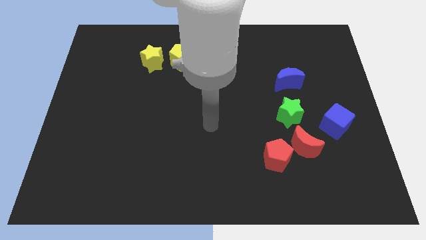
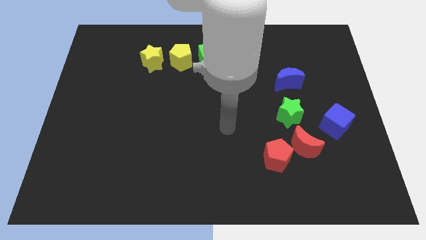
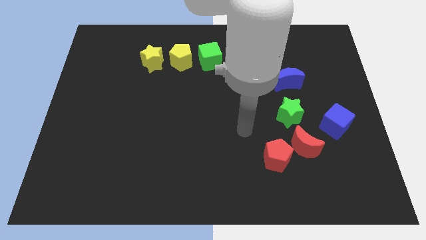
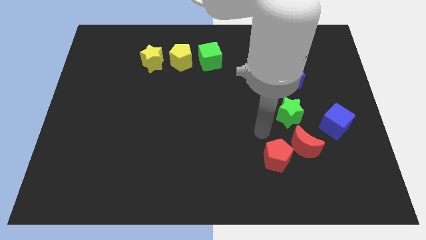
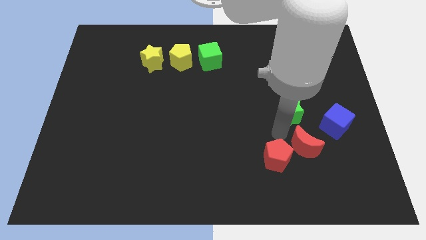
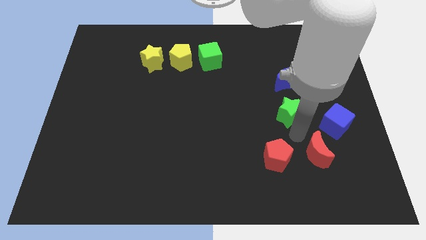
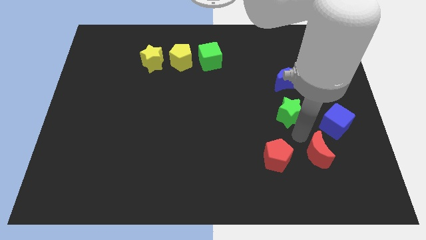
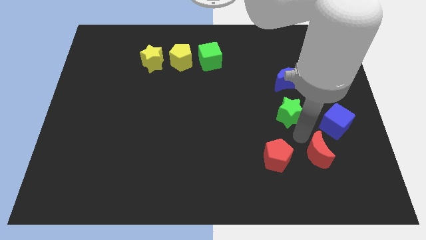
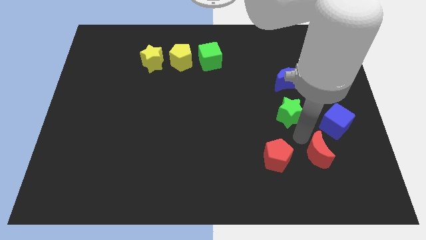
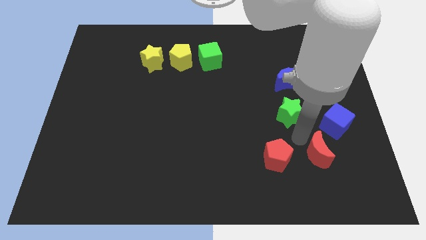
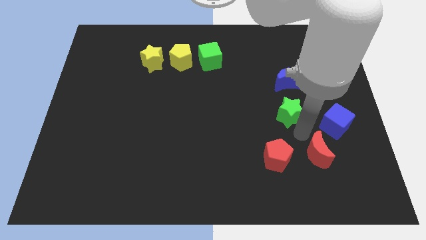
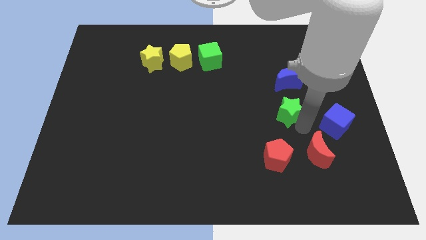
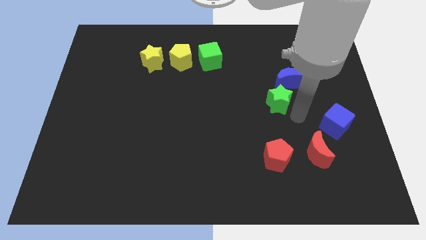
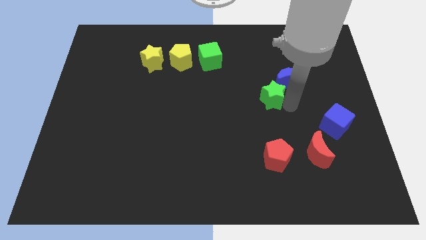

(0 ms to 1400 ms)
push the red crescent towards the right bottom of the board

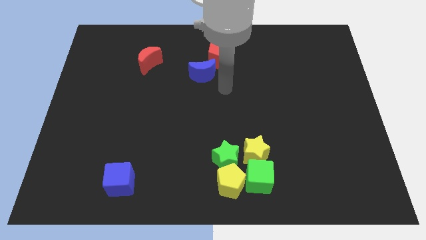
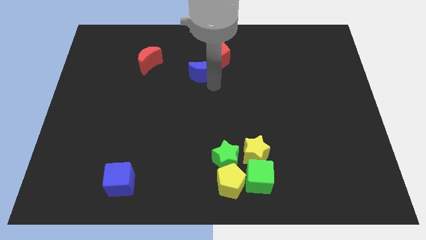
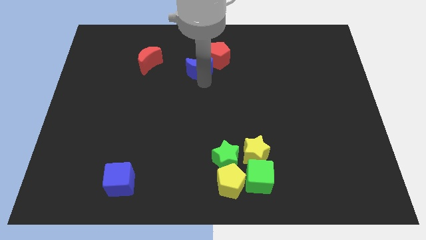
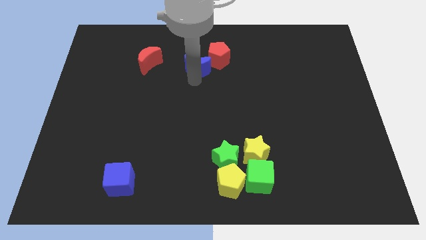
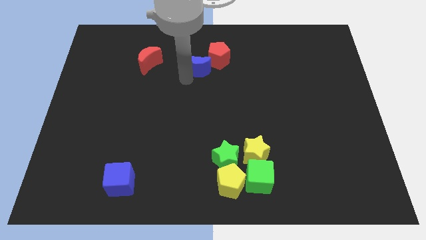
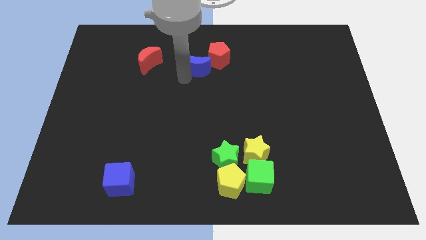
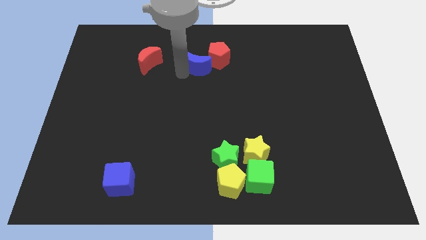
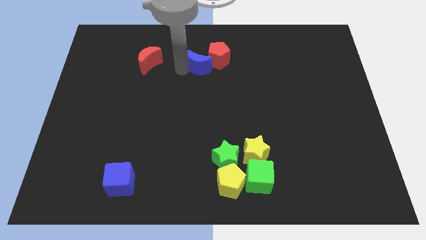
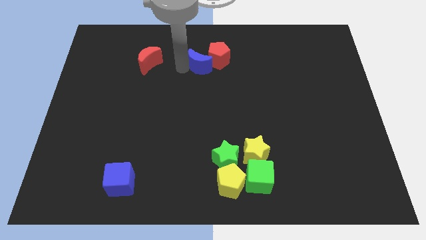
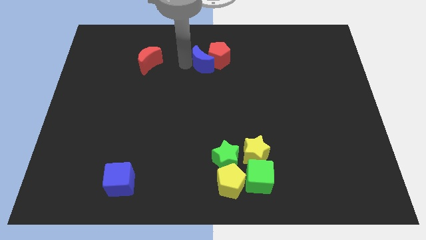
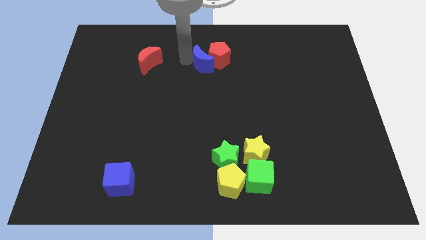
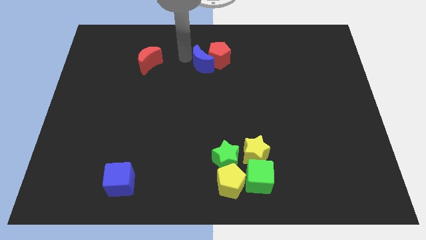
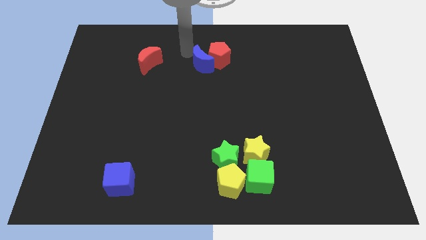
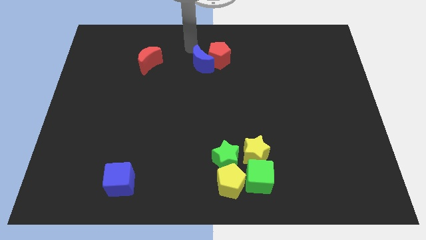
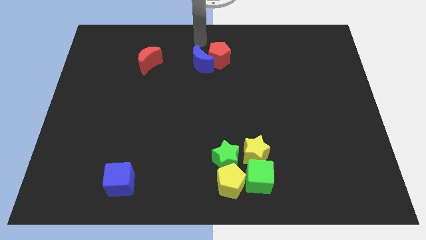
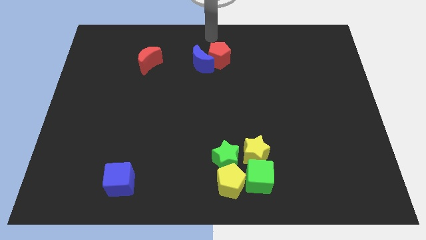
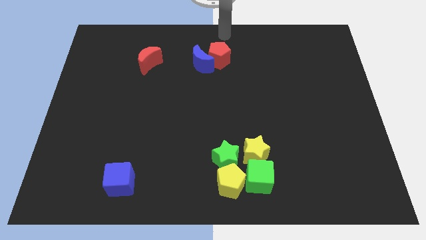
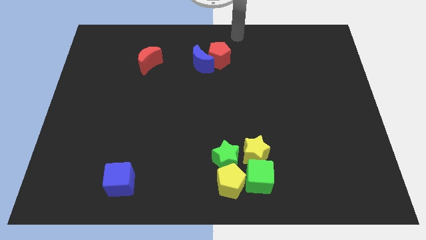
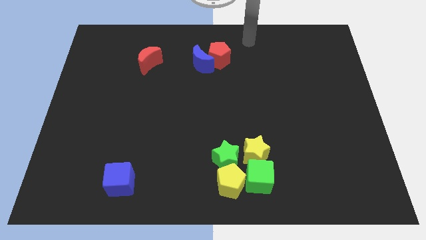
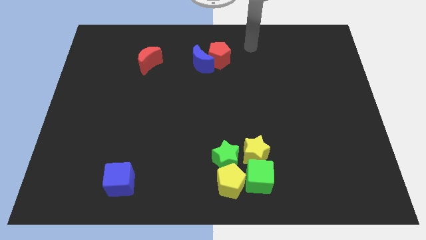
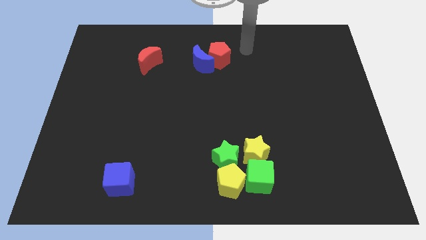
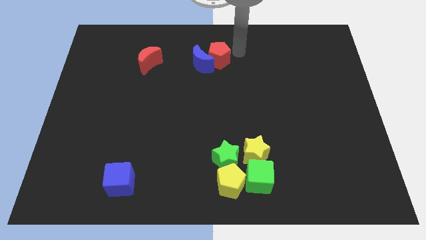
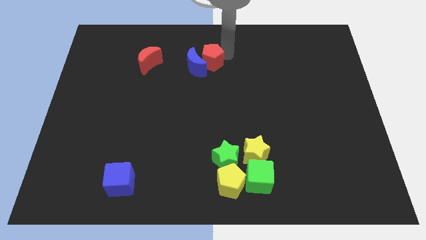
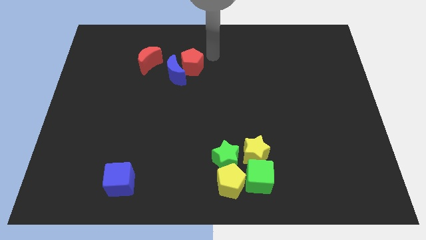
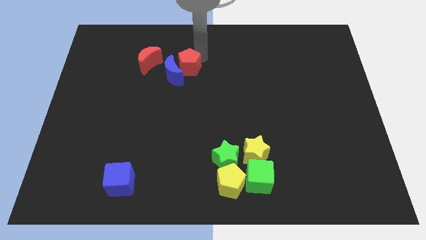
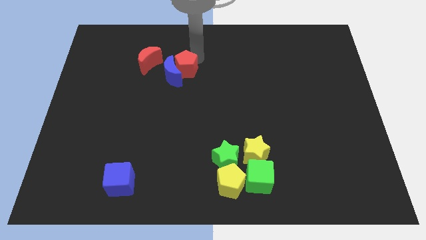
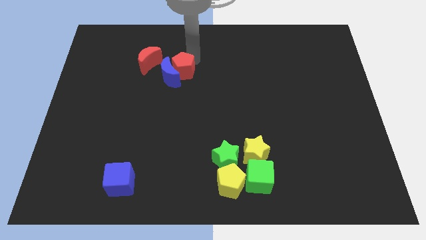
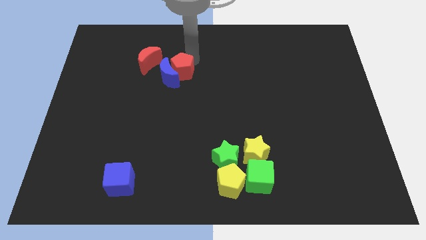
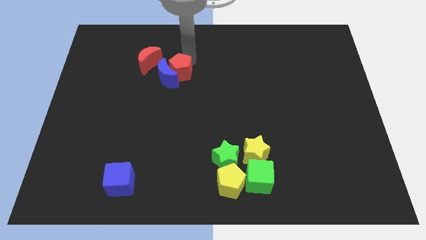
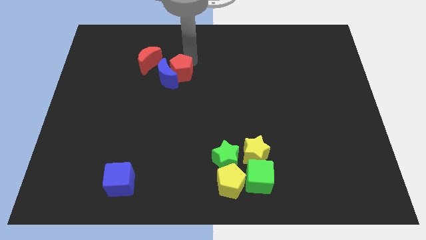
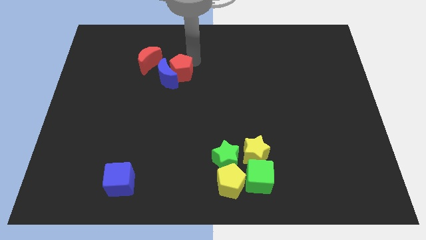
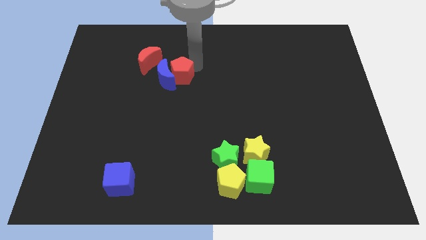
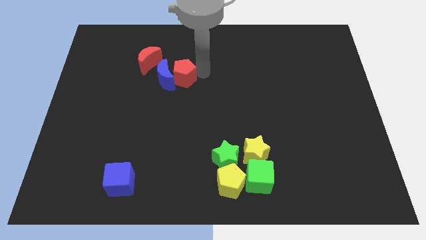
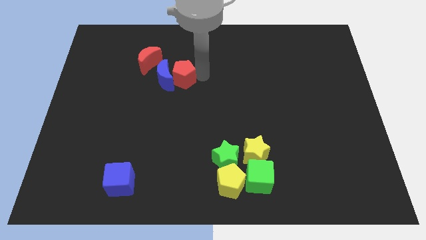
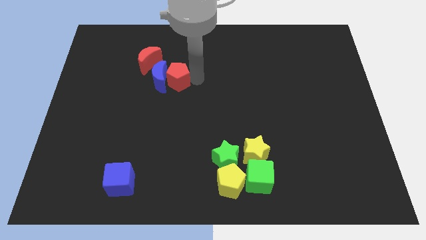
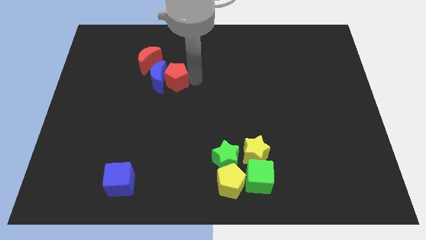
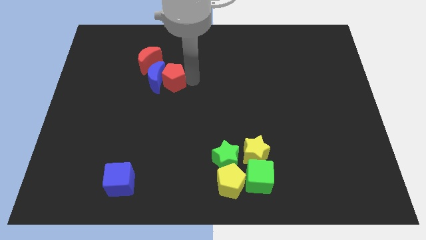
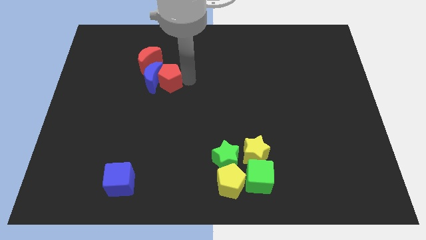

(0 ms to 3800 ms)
move the red pentagon and blue moon to the bottom right side of the red crescent

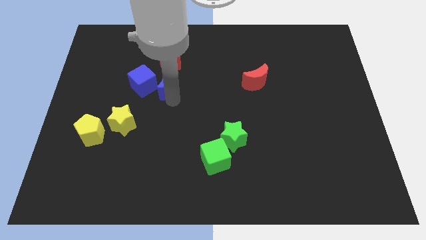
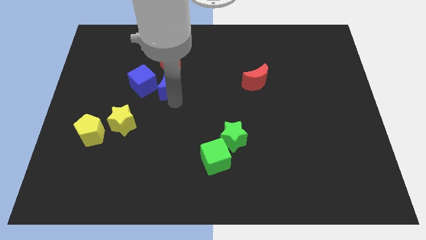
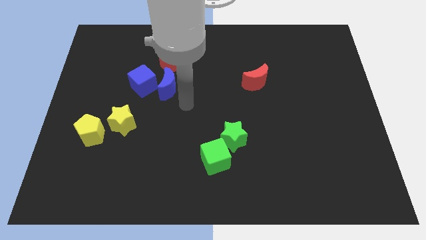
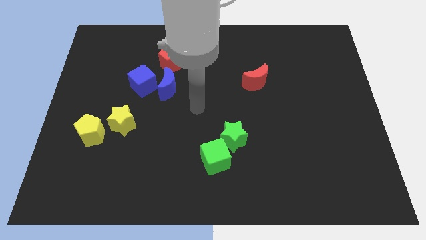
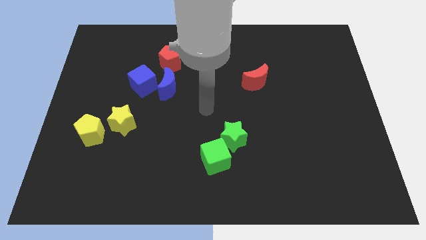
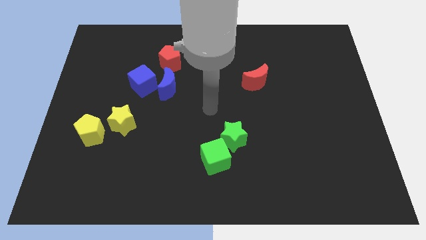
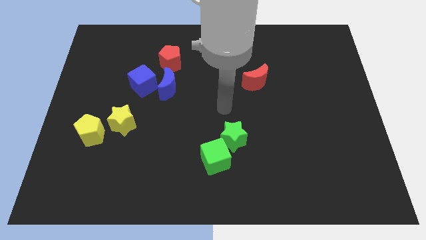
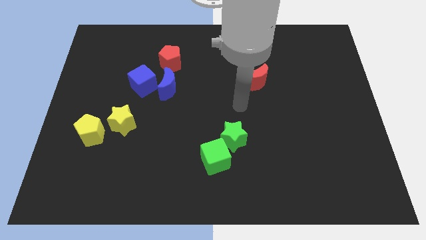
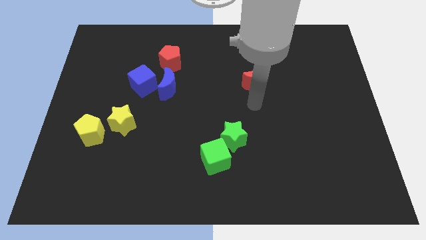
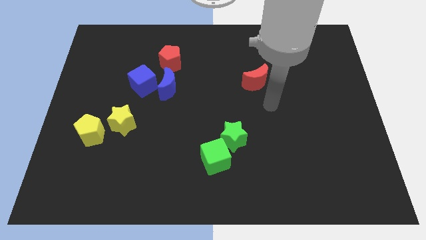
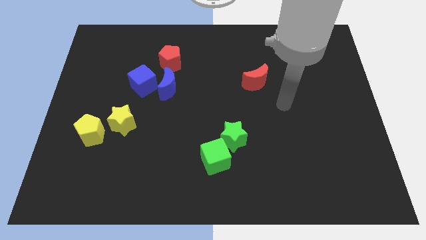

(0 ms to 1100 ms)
move the arm away from the blue moon

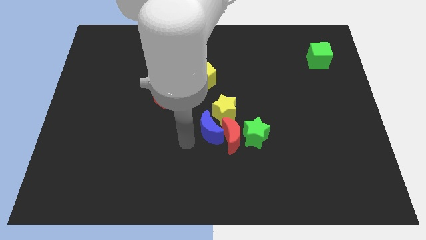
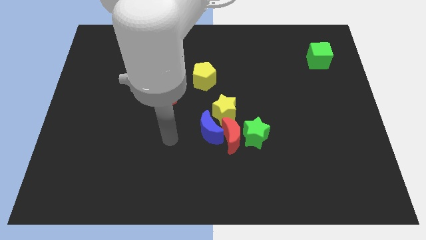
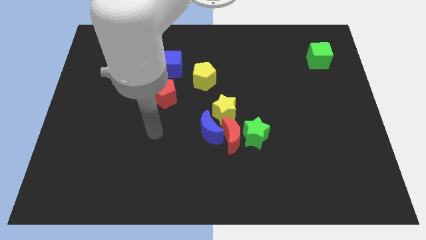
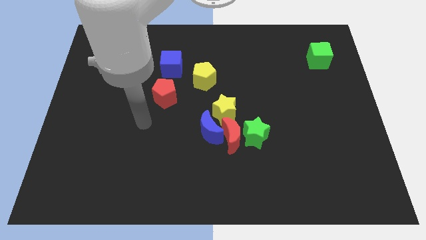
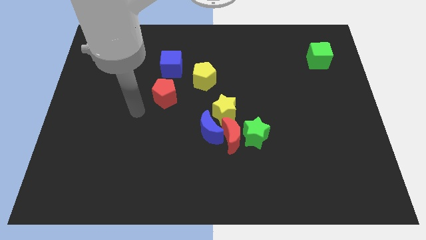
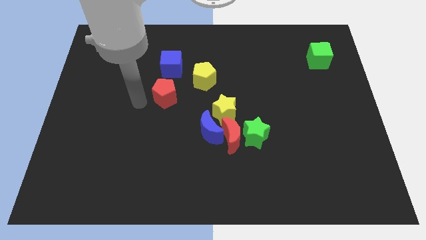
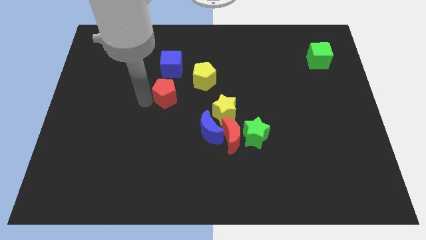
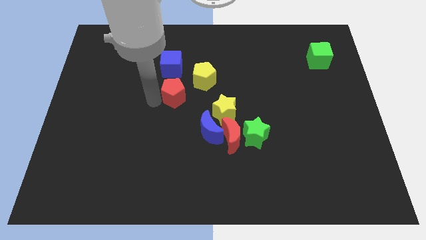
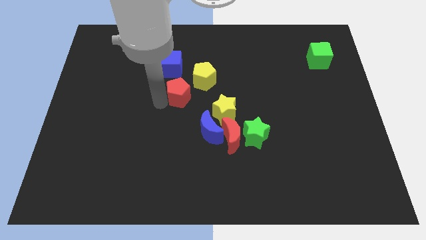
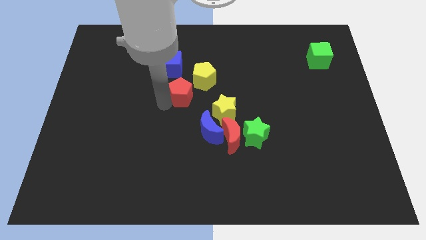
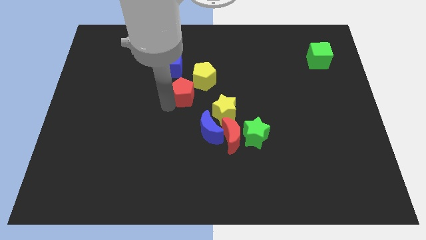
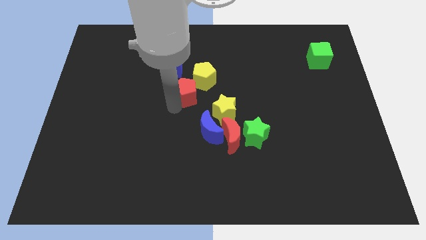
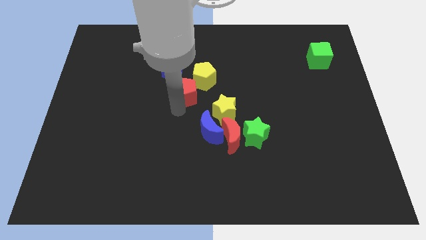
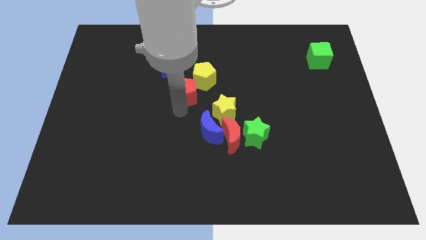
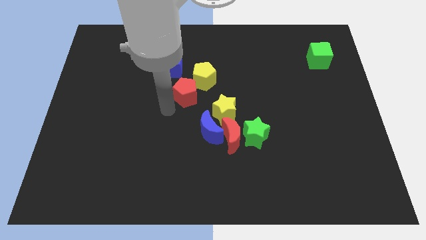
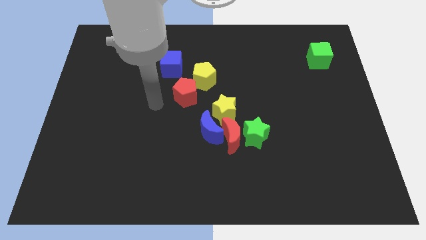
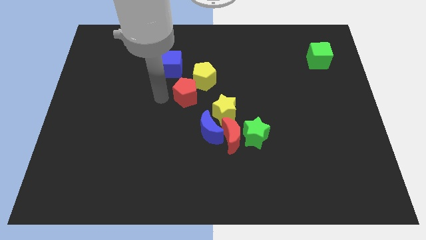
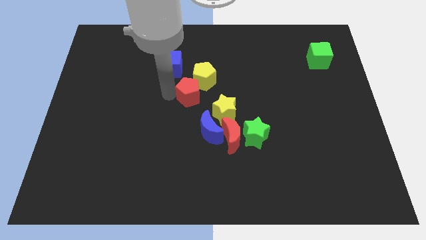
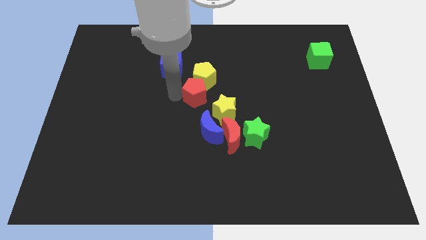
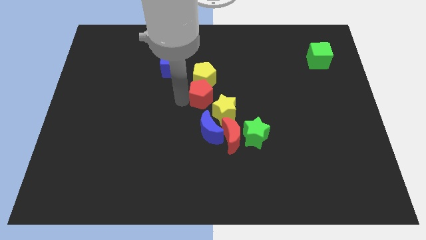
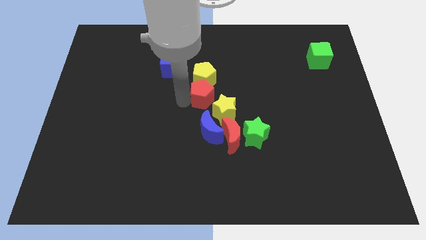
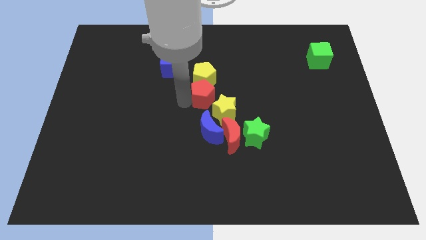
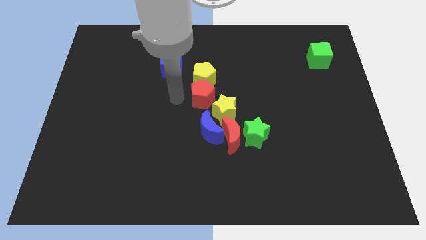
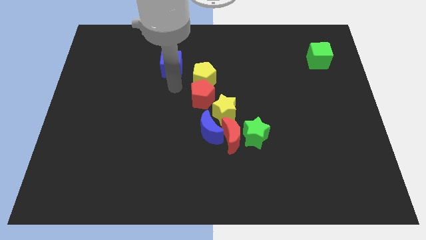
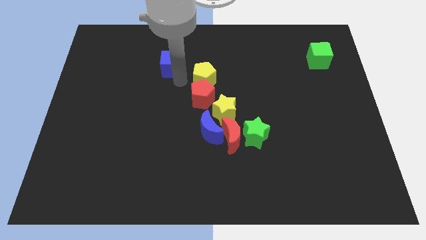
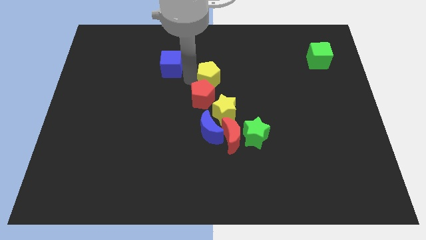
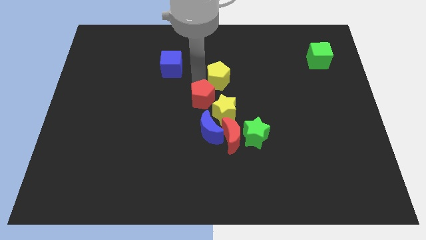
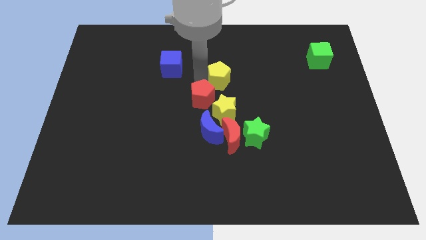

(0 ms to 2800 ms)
place the red pentagon yellow pentagon into the group of blocks

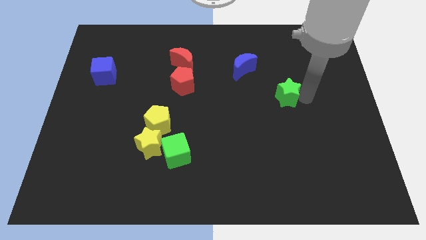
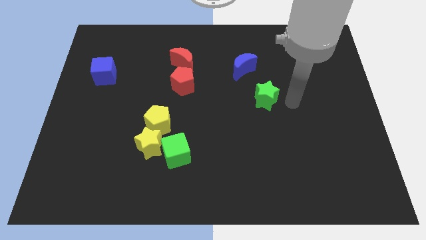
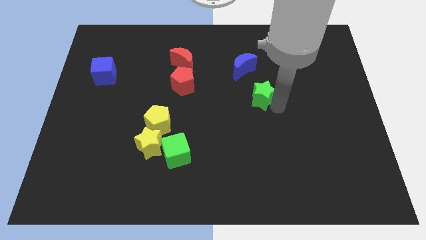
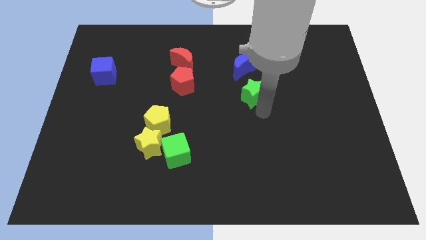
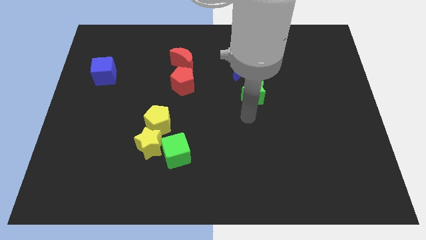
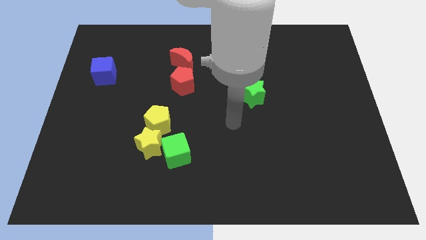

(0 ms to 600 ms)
move the green star below the blue crescent
